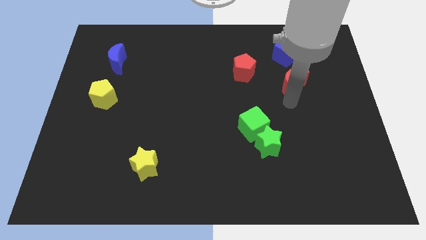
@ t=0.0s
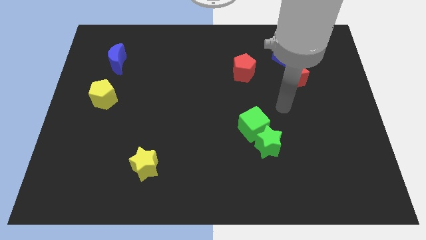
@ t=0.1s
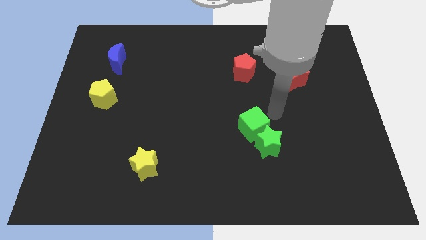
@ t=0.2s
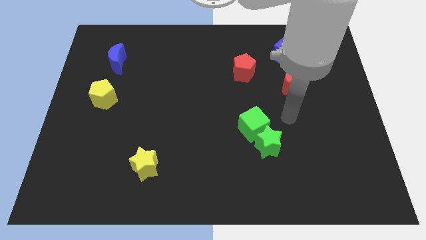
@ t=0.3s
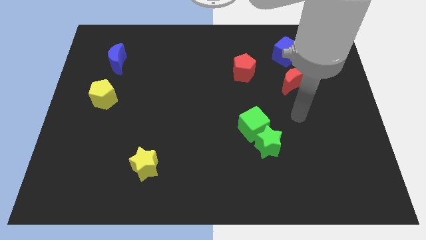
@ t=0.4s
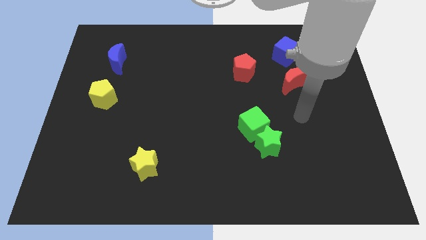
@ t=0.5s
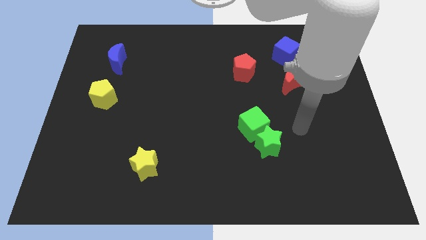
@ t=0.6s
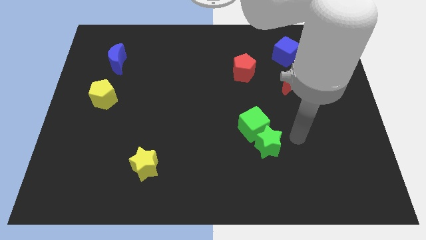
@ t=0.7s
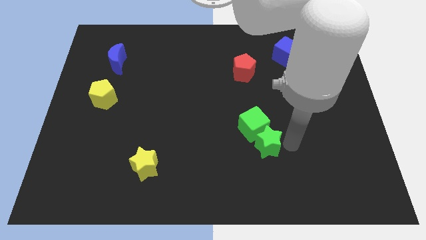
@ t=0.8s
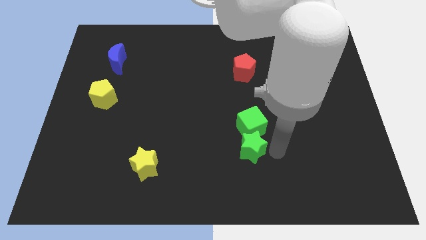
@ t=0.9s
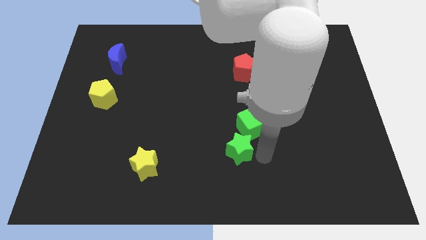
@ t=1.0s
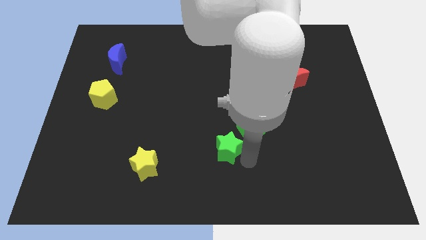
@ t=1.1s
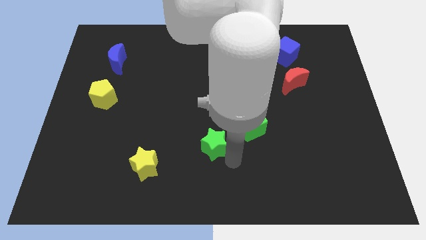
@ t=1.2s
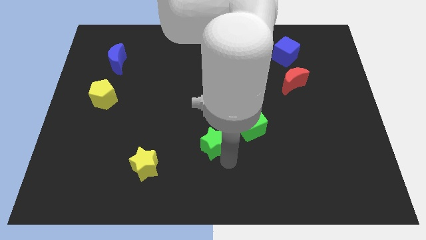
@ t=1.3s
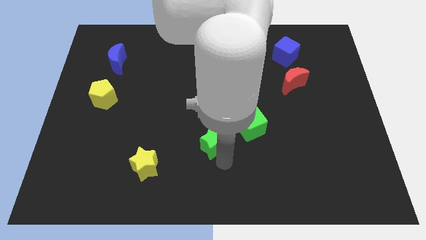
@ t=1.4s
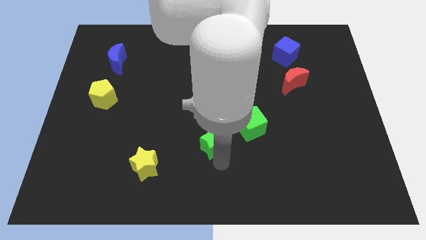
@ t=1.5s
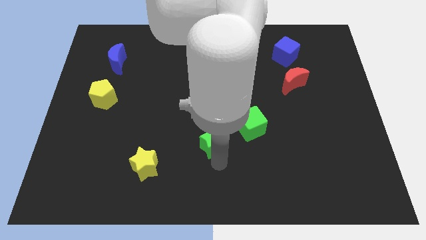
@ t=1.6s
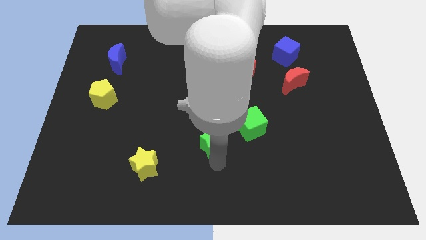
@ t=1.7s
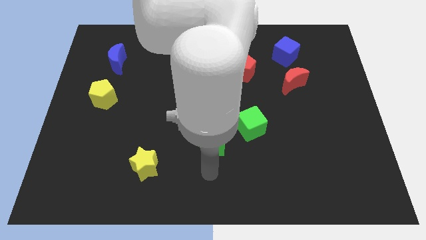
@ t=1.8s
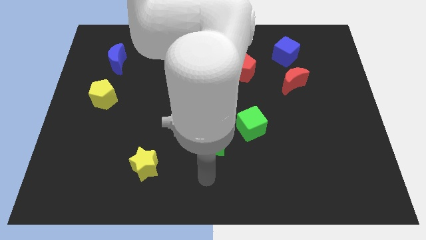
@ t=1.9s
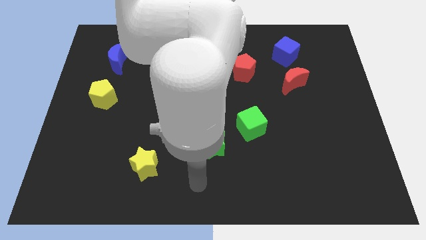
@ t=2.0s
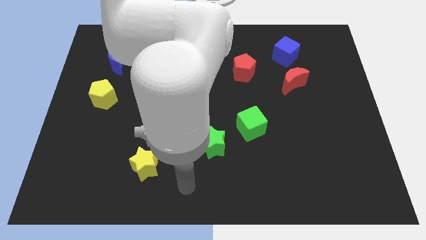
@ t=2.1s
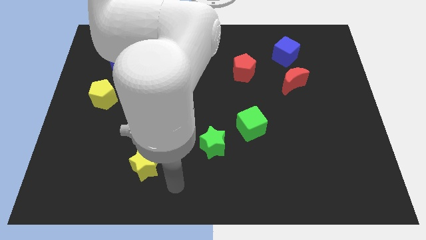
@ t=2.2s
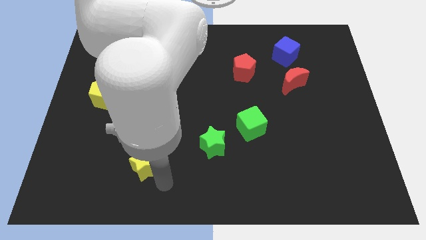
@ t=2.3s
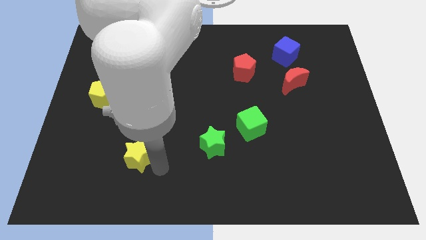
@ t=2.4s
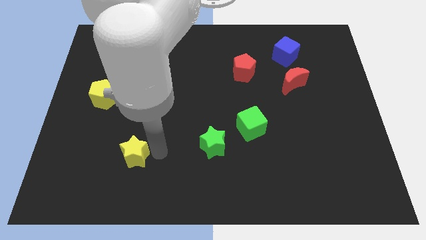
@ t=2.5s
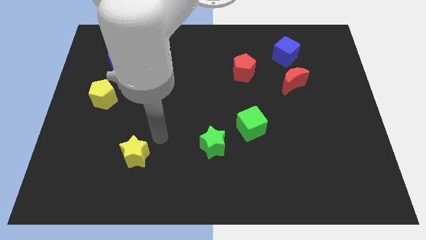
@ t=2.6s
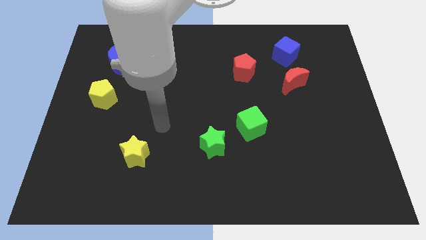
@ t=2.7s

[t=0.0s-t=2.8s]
place the green star in between the yellow star and green cube

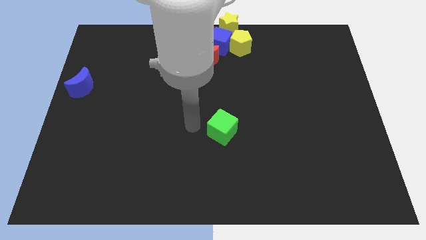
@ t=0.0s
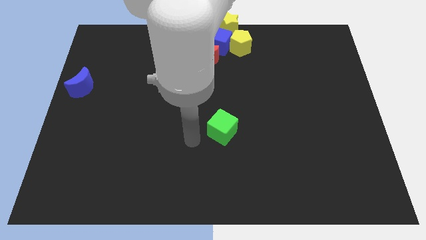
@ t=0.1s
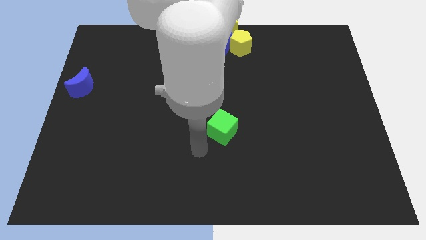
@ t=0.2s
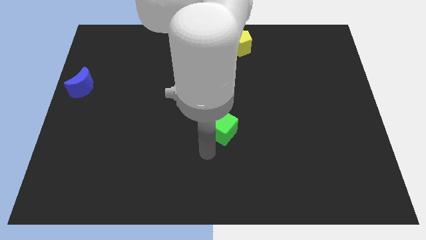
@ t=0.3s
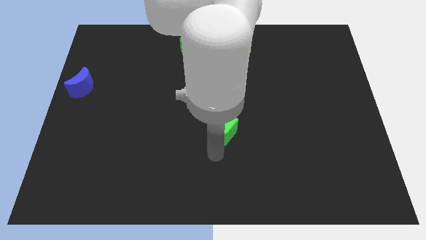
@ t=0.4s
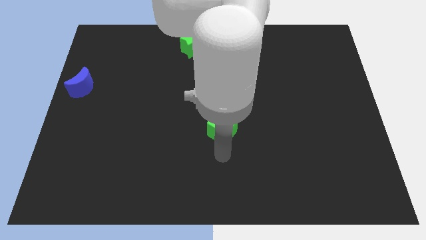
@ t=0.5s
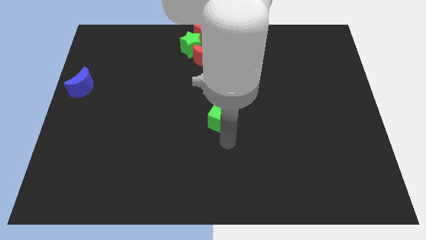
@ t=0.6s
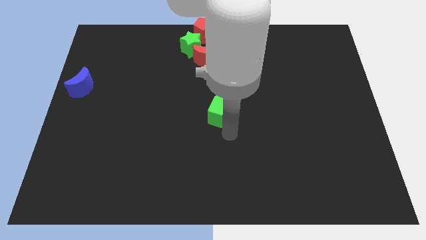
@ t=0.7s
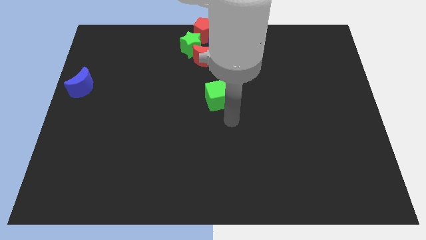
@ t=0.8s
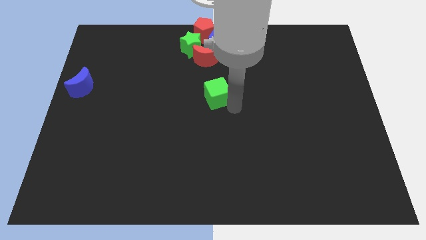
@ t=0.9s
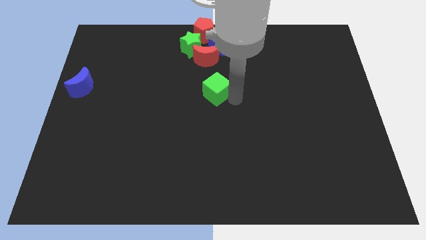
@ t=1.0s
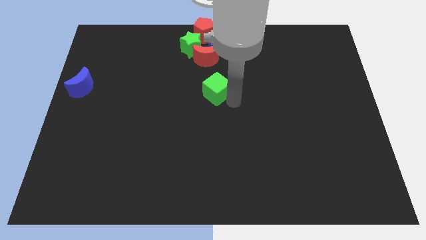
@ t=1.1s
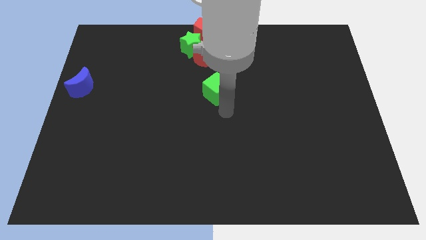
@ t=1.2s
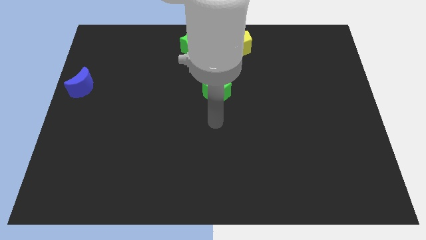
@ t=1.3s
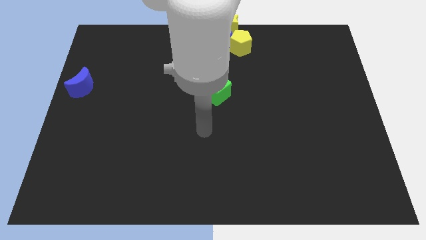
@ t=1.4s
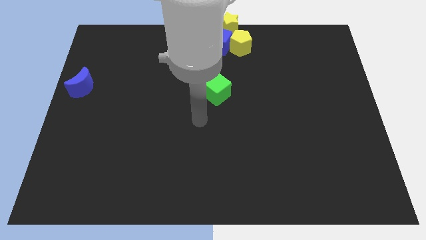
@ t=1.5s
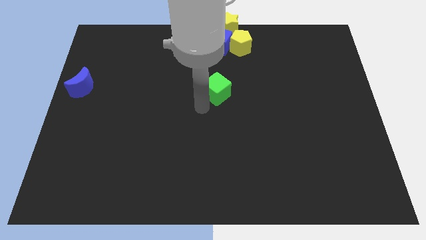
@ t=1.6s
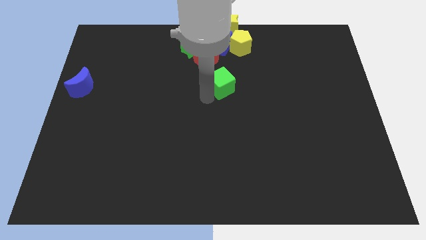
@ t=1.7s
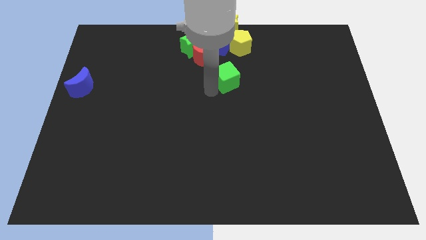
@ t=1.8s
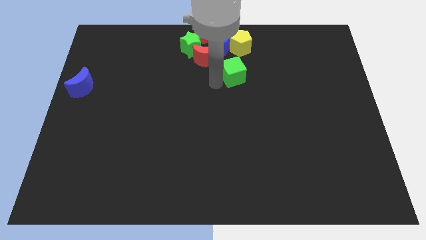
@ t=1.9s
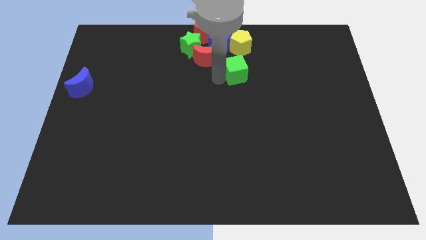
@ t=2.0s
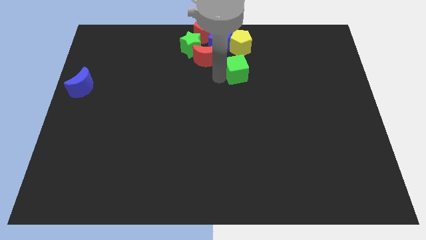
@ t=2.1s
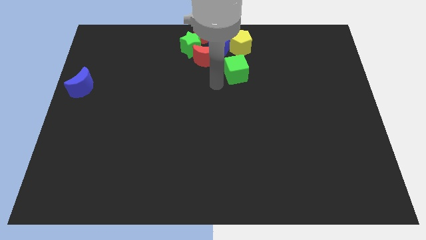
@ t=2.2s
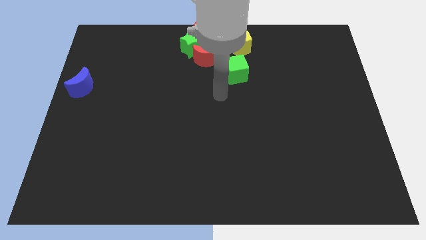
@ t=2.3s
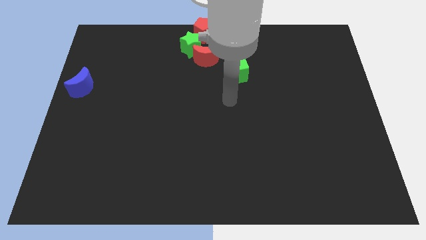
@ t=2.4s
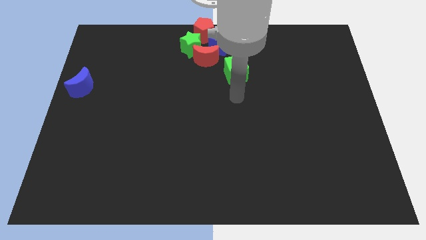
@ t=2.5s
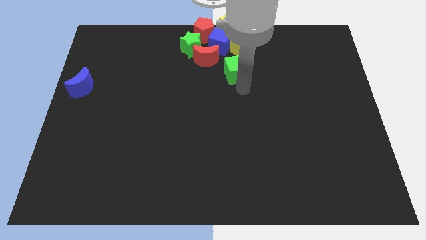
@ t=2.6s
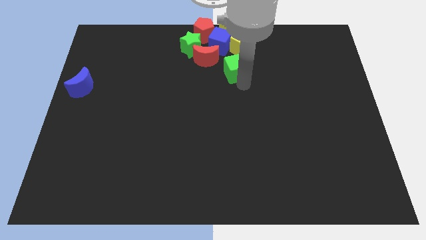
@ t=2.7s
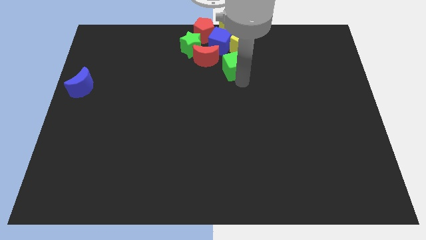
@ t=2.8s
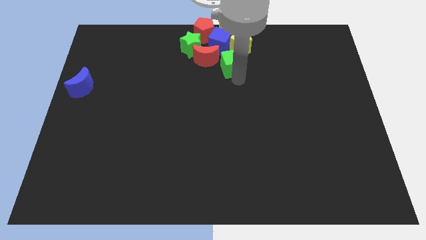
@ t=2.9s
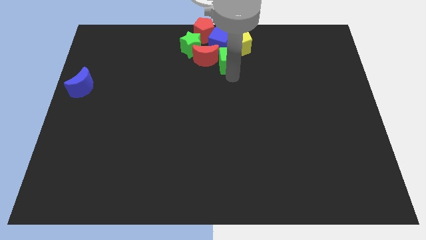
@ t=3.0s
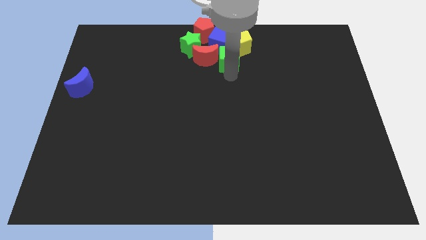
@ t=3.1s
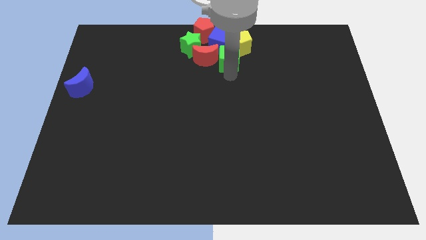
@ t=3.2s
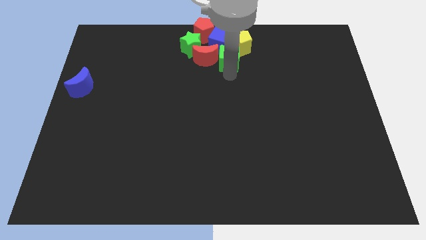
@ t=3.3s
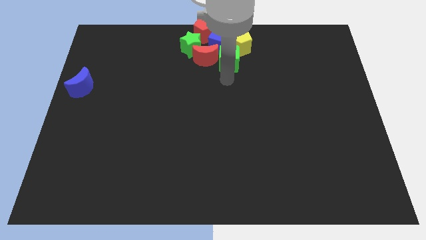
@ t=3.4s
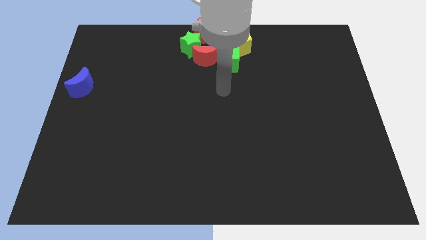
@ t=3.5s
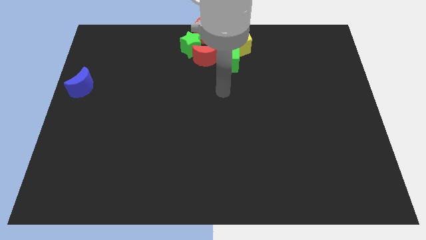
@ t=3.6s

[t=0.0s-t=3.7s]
push the green cube to the right side of the red moon

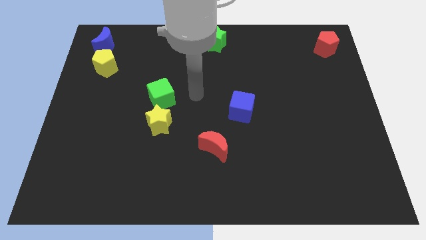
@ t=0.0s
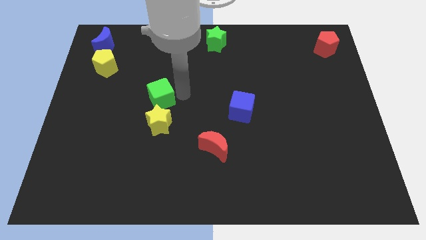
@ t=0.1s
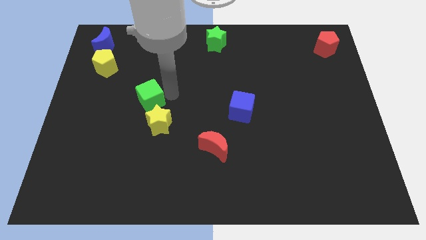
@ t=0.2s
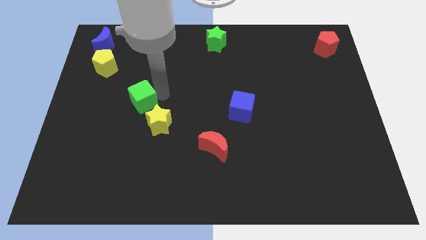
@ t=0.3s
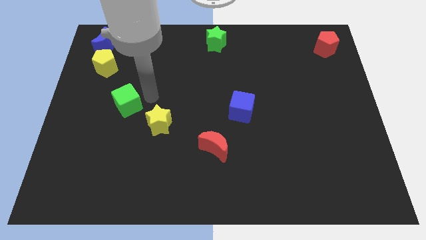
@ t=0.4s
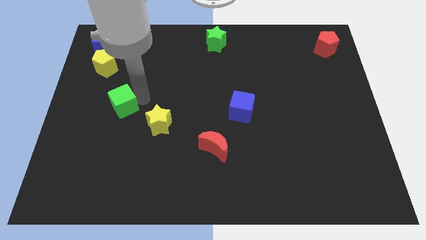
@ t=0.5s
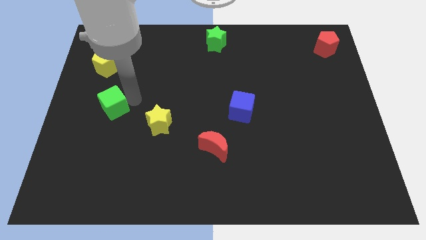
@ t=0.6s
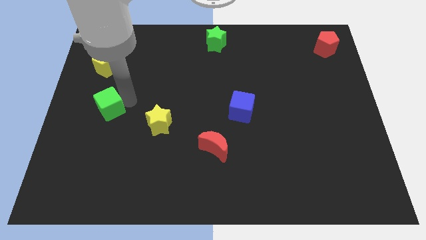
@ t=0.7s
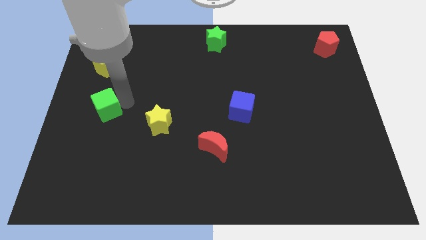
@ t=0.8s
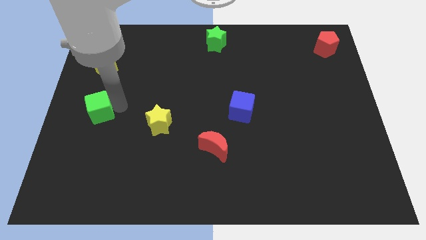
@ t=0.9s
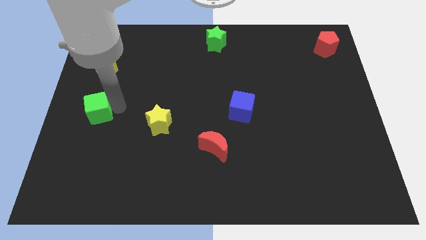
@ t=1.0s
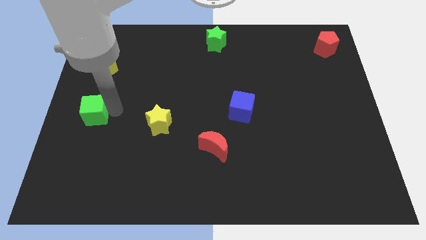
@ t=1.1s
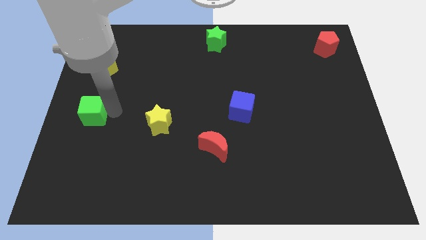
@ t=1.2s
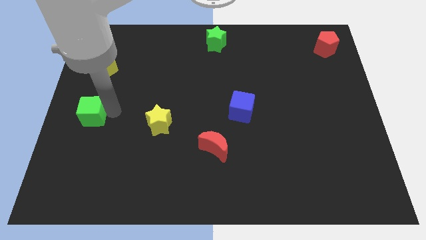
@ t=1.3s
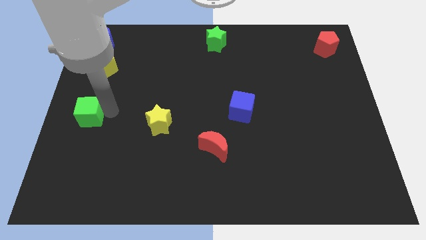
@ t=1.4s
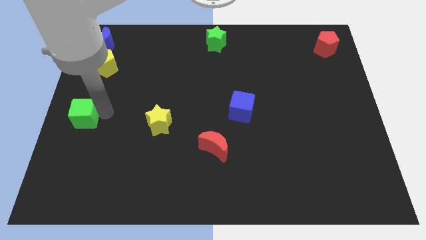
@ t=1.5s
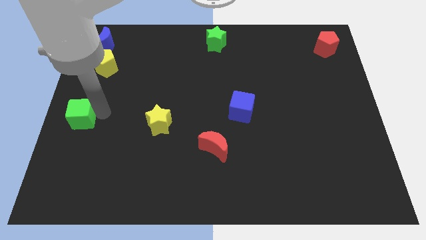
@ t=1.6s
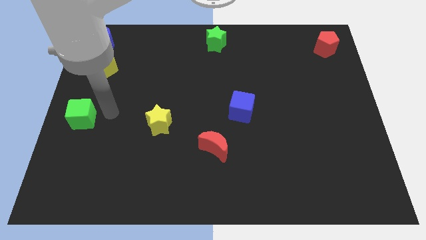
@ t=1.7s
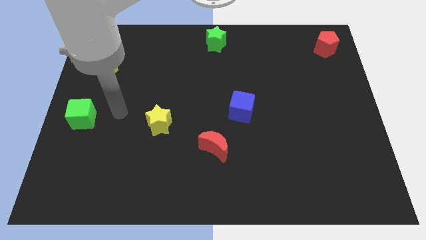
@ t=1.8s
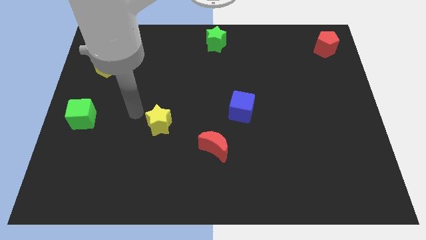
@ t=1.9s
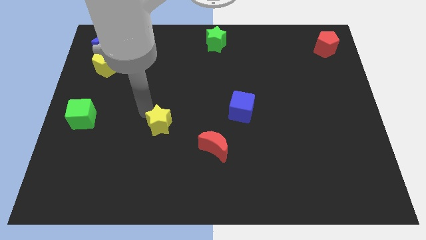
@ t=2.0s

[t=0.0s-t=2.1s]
place the green cube to the center left side of the board

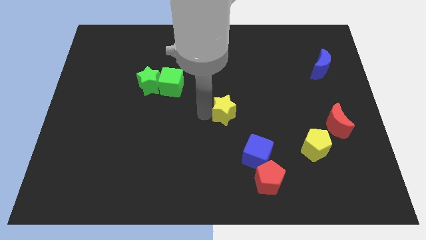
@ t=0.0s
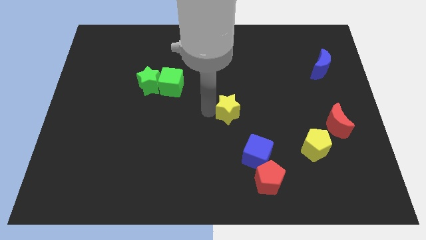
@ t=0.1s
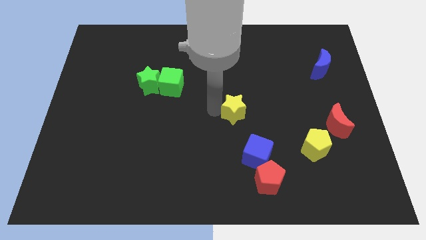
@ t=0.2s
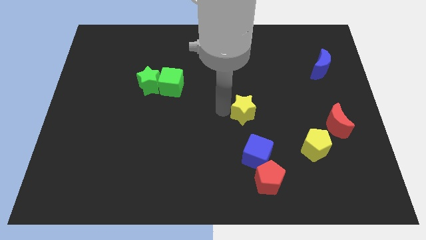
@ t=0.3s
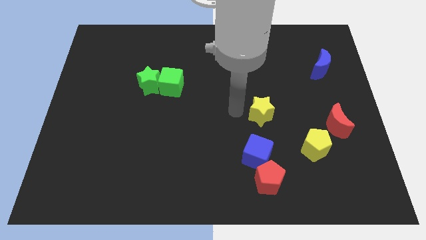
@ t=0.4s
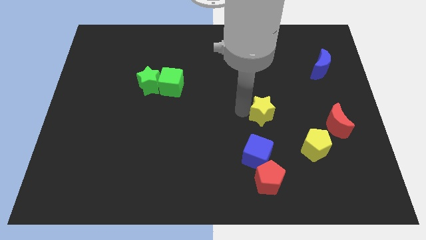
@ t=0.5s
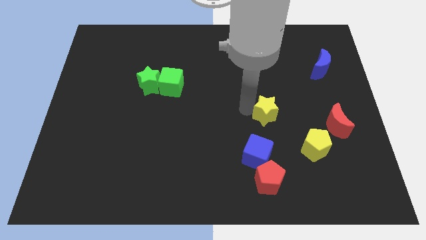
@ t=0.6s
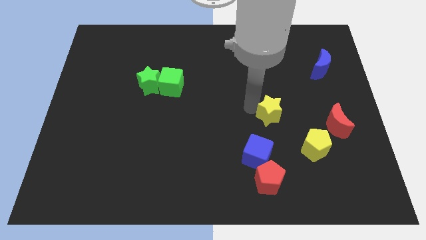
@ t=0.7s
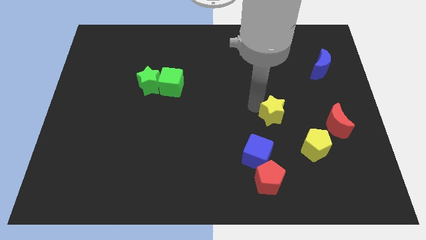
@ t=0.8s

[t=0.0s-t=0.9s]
push the yellow star parallel to blue cube
